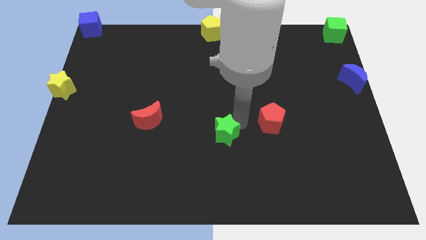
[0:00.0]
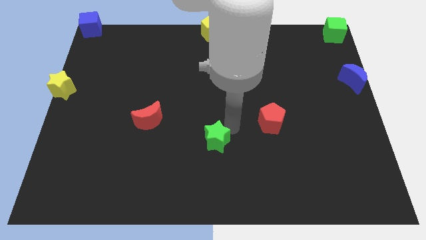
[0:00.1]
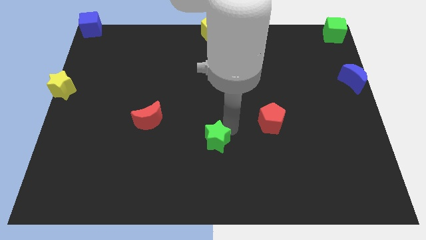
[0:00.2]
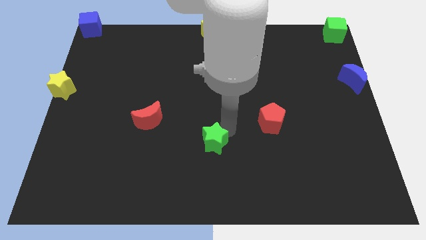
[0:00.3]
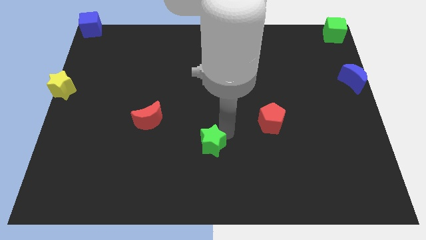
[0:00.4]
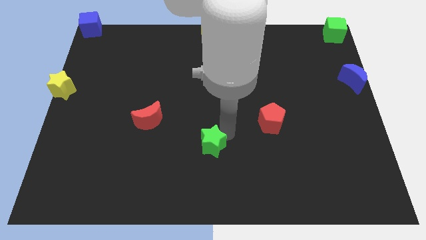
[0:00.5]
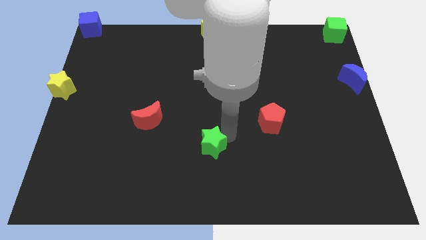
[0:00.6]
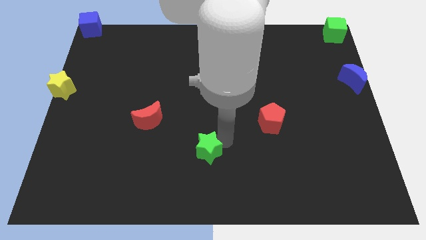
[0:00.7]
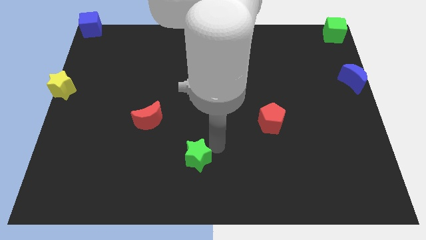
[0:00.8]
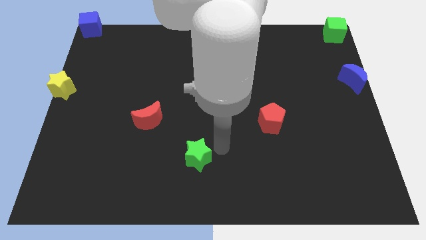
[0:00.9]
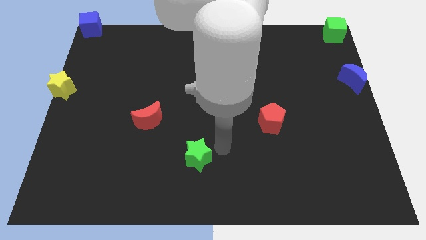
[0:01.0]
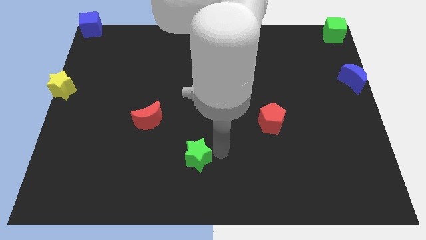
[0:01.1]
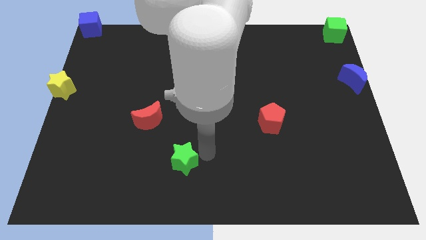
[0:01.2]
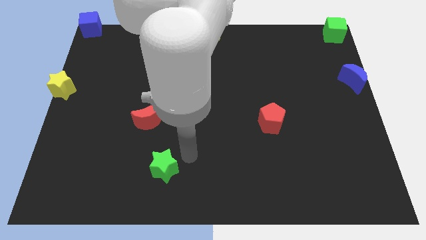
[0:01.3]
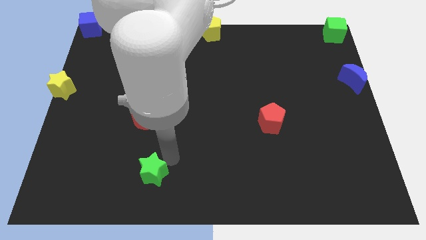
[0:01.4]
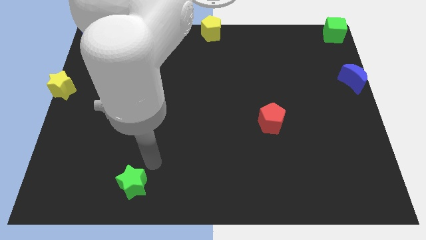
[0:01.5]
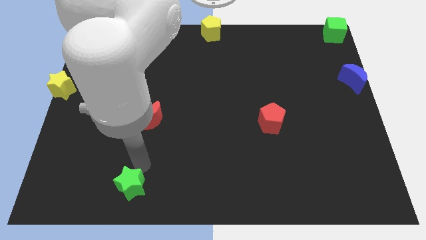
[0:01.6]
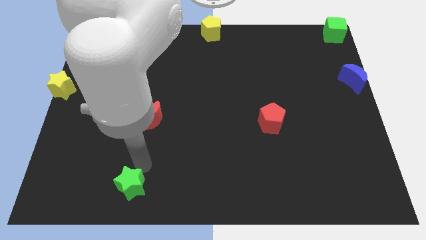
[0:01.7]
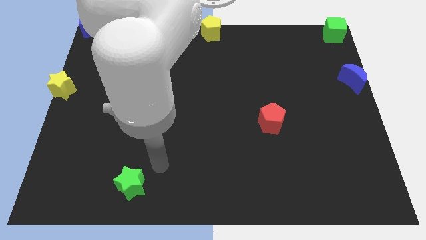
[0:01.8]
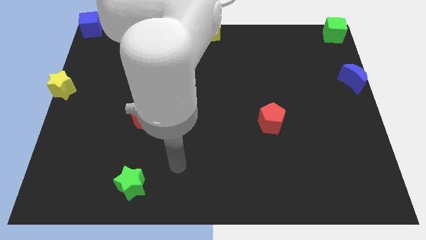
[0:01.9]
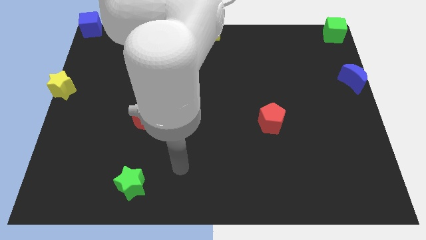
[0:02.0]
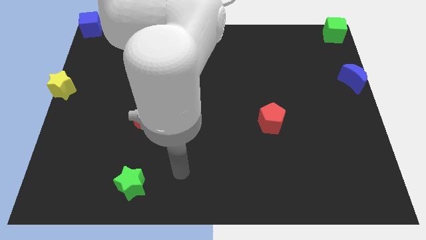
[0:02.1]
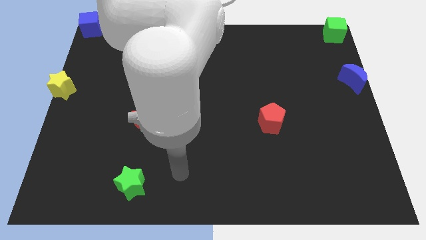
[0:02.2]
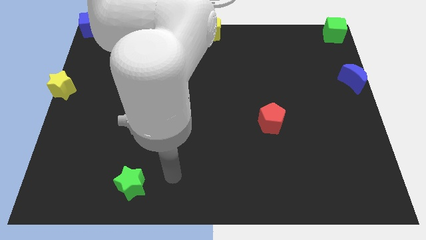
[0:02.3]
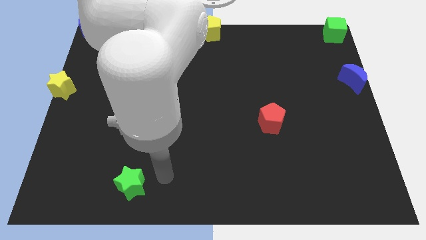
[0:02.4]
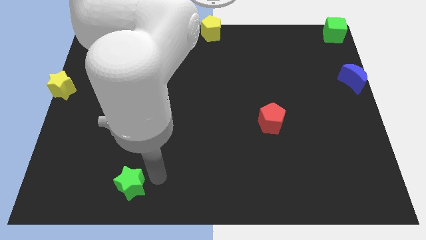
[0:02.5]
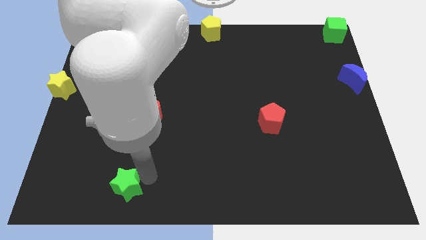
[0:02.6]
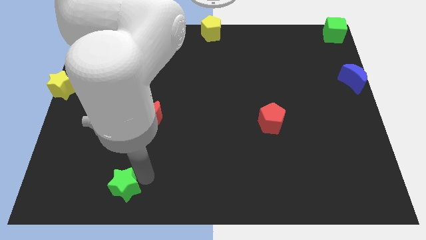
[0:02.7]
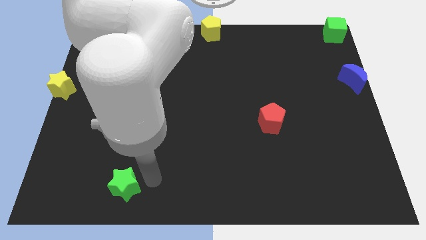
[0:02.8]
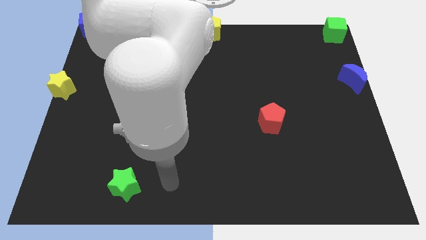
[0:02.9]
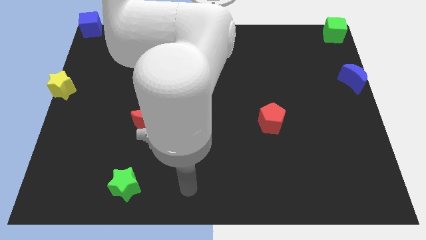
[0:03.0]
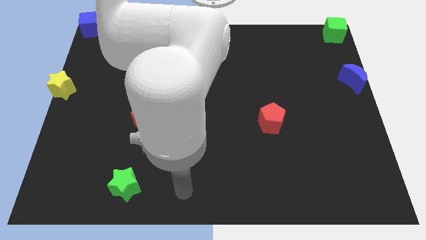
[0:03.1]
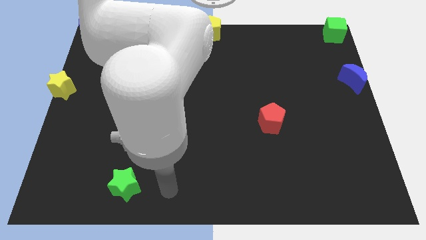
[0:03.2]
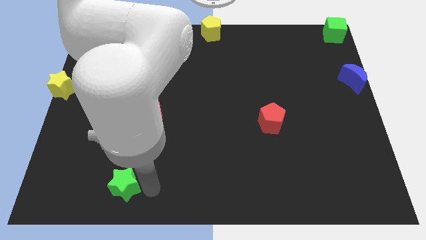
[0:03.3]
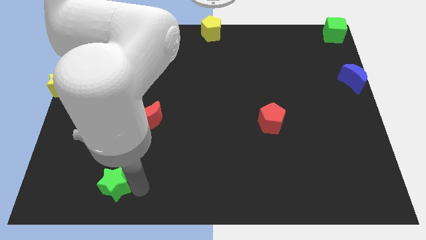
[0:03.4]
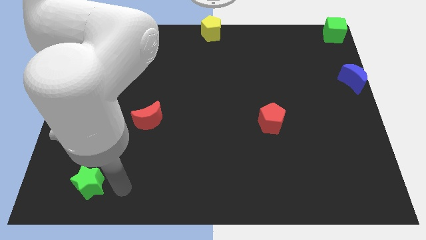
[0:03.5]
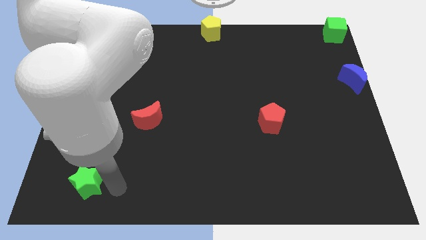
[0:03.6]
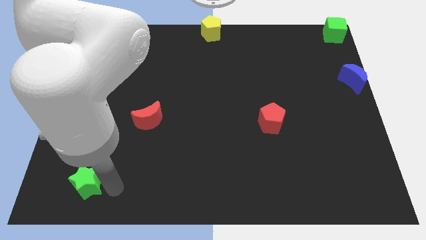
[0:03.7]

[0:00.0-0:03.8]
drag the yellow star to the bottom left side of the board

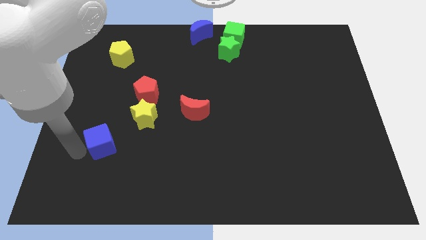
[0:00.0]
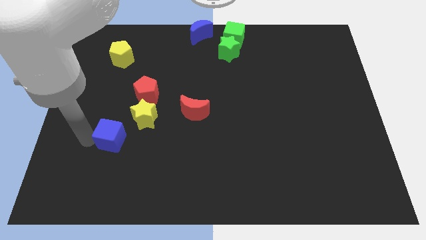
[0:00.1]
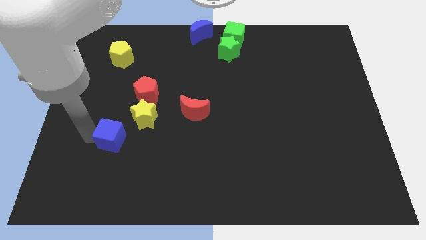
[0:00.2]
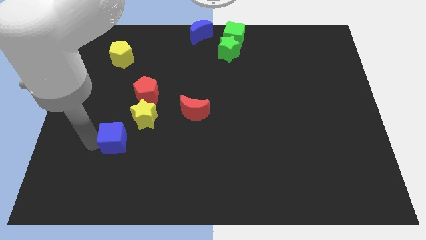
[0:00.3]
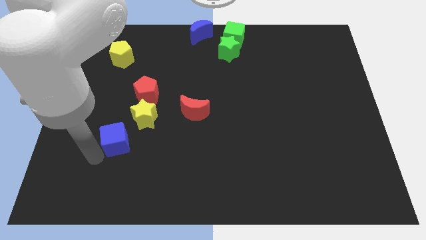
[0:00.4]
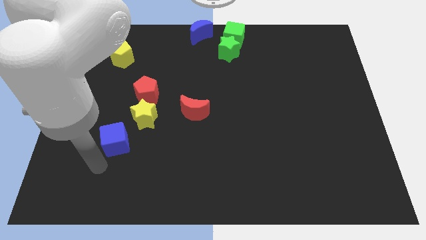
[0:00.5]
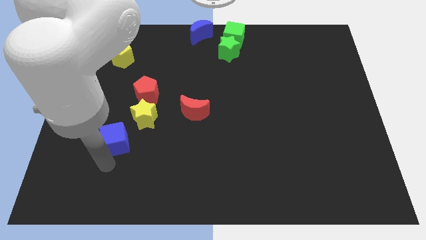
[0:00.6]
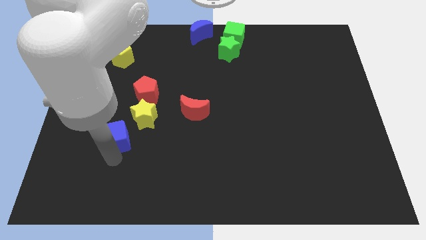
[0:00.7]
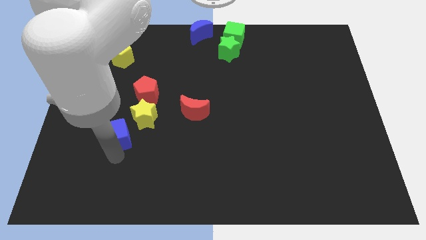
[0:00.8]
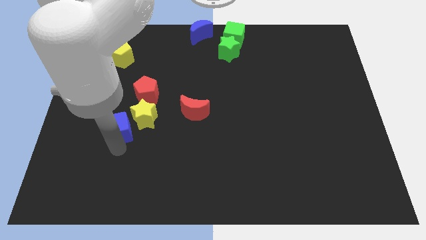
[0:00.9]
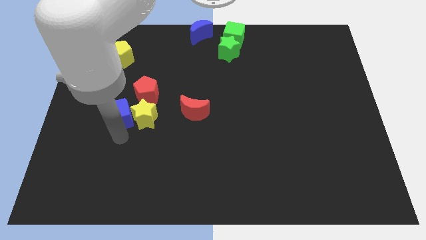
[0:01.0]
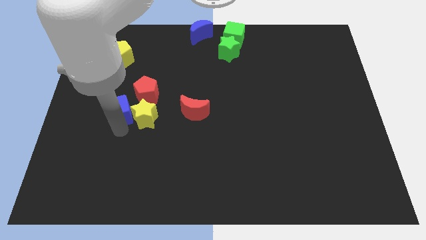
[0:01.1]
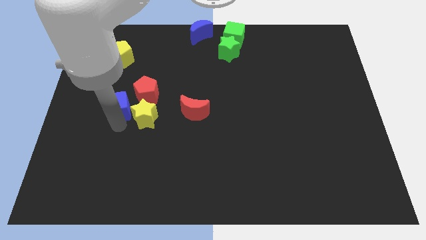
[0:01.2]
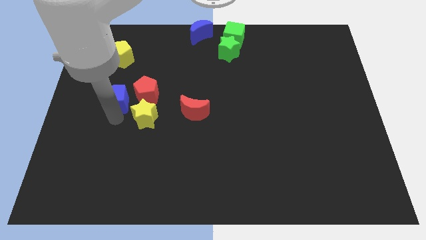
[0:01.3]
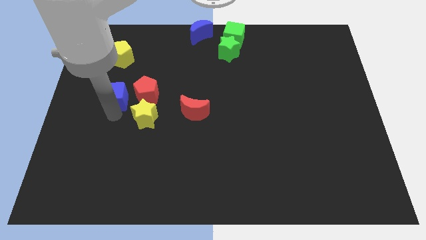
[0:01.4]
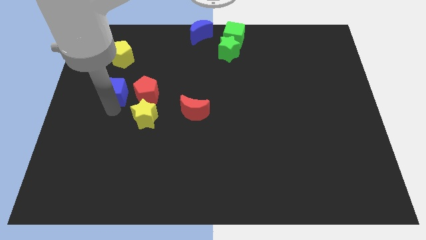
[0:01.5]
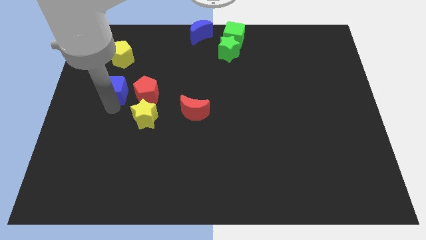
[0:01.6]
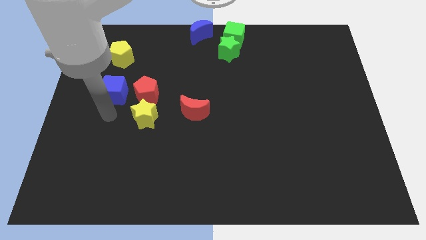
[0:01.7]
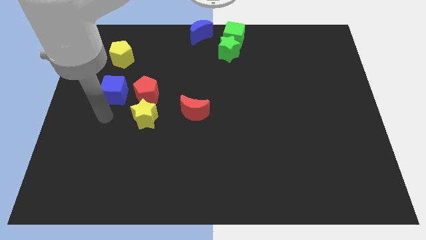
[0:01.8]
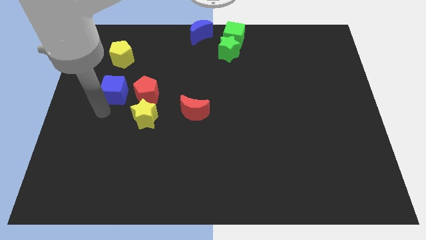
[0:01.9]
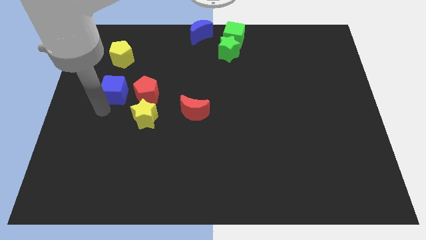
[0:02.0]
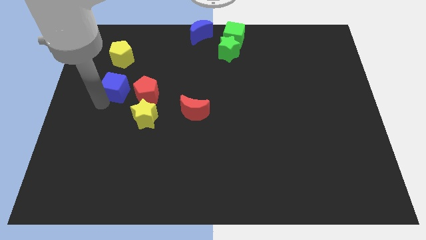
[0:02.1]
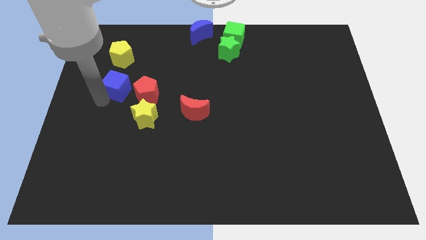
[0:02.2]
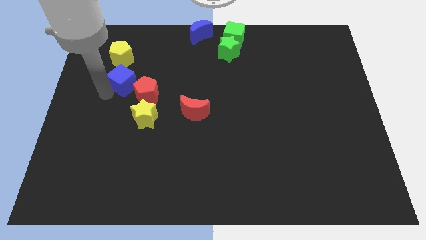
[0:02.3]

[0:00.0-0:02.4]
move the blue cube below the yellow pentagon

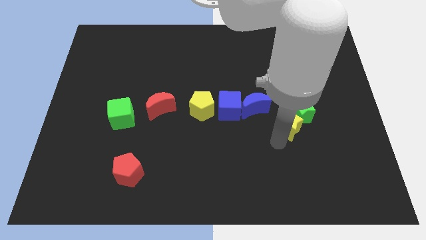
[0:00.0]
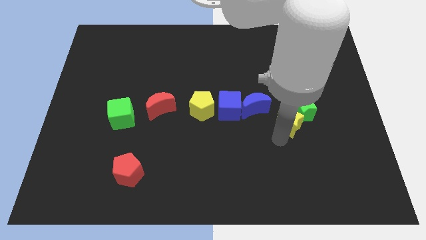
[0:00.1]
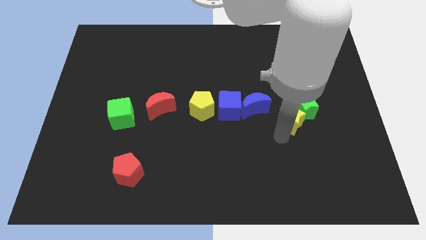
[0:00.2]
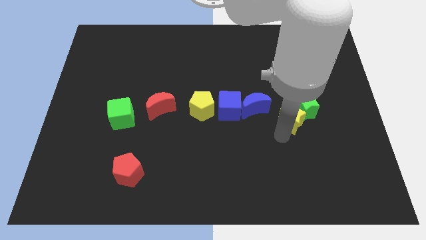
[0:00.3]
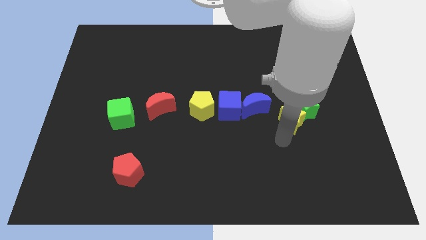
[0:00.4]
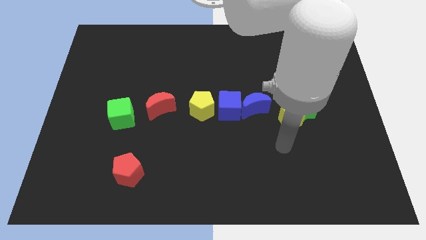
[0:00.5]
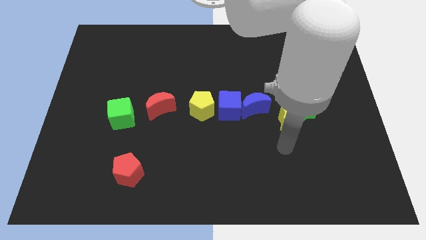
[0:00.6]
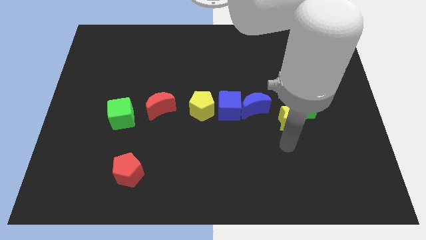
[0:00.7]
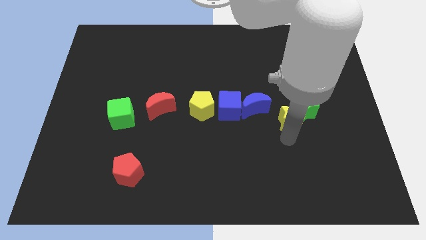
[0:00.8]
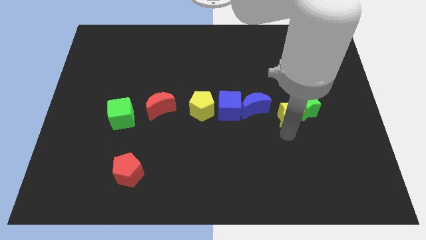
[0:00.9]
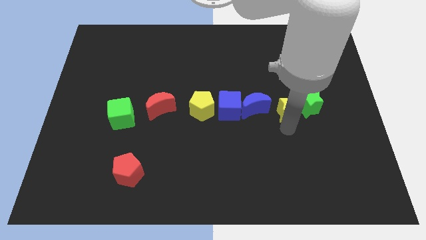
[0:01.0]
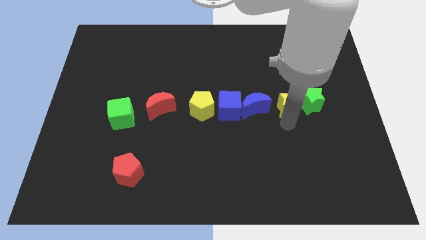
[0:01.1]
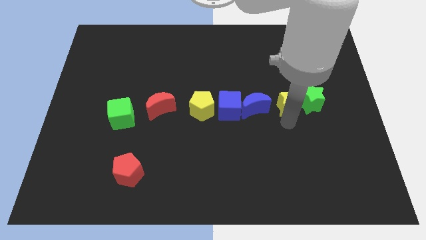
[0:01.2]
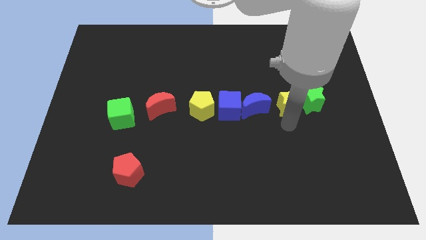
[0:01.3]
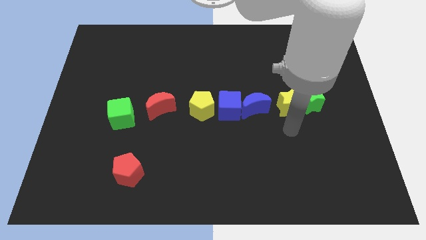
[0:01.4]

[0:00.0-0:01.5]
push the yellow star slightly upwards

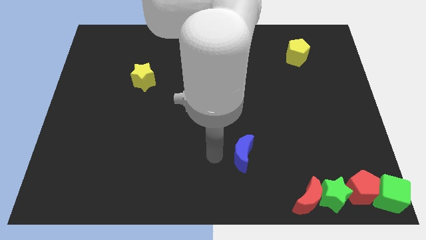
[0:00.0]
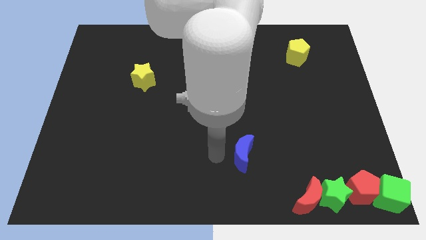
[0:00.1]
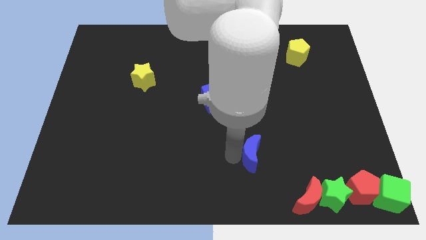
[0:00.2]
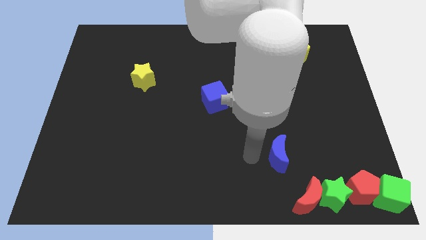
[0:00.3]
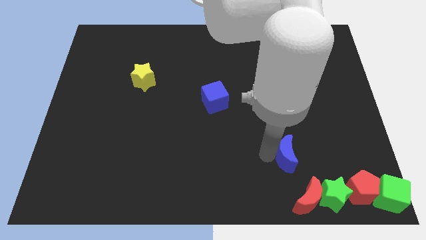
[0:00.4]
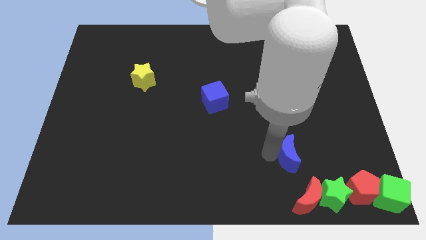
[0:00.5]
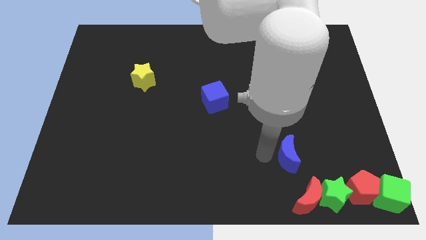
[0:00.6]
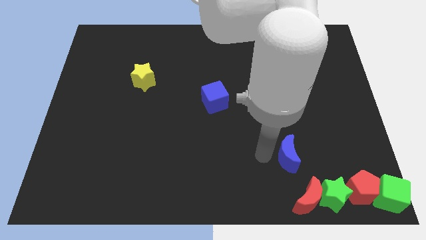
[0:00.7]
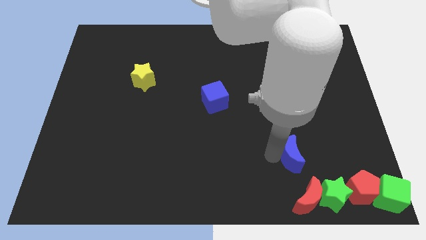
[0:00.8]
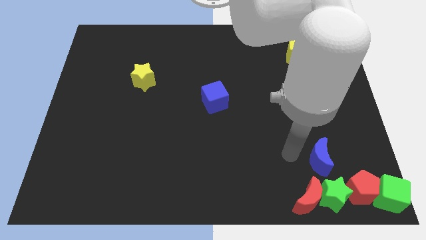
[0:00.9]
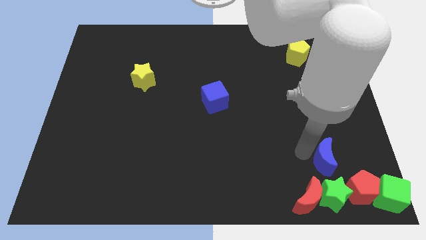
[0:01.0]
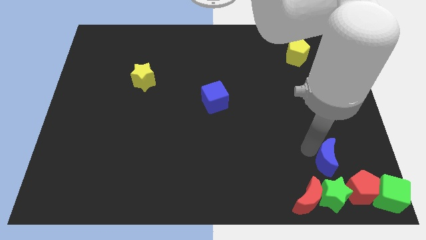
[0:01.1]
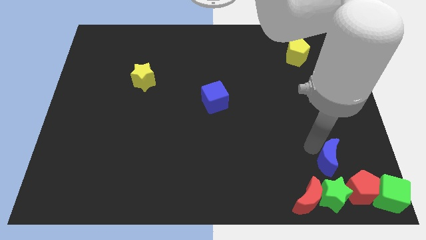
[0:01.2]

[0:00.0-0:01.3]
place blue moon above green star

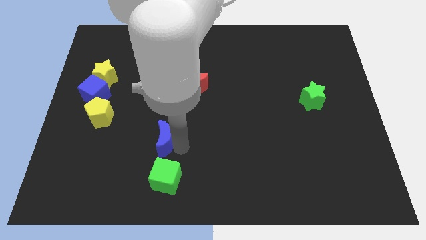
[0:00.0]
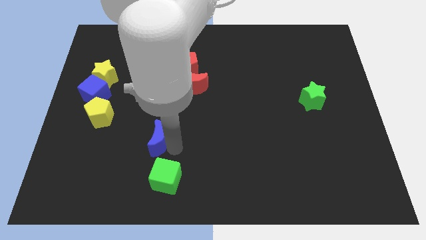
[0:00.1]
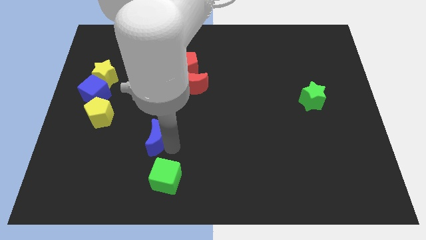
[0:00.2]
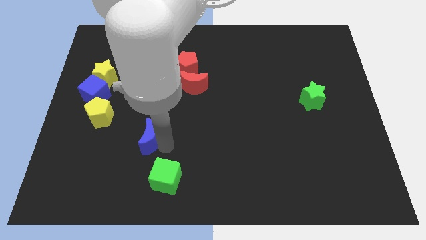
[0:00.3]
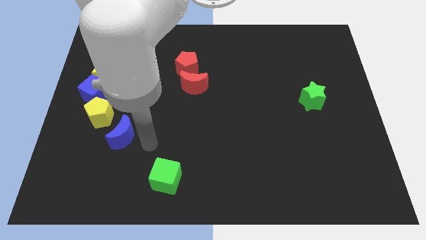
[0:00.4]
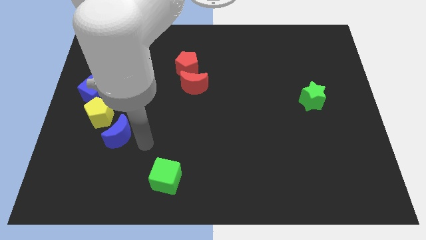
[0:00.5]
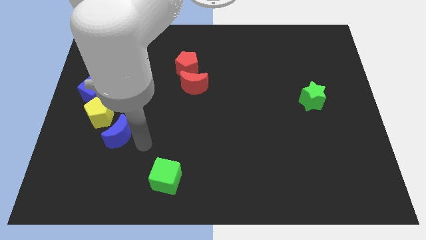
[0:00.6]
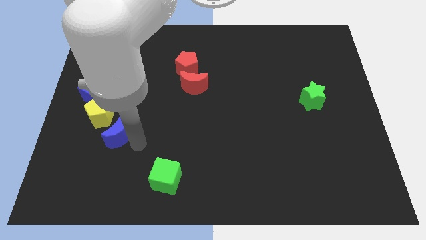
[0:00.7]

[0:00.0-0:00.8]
slide the blue moon diagonally bottom right to the yellow pentagon
